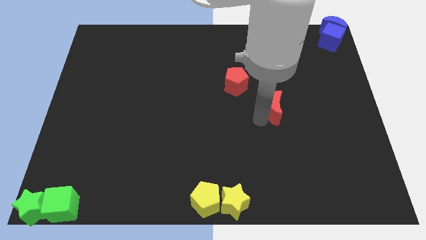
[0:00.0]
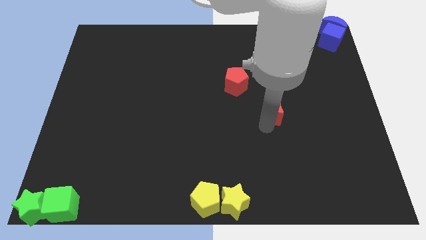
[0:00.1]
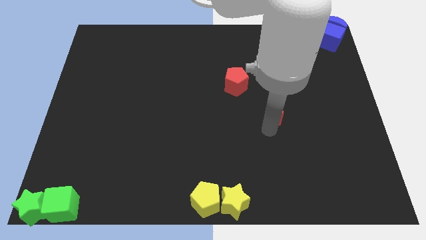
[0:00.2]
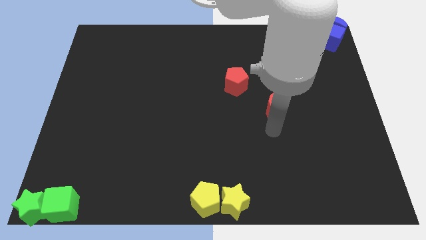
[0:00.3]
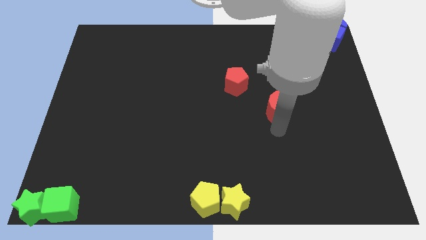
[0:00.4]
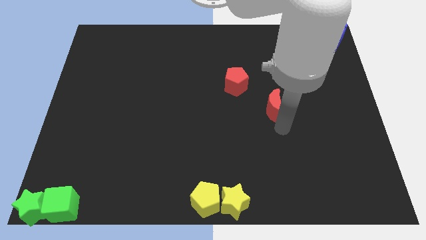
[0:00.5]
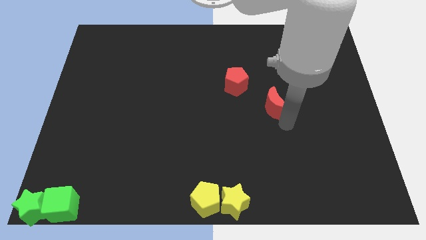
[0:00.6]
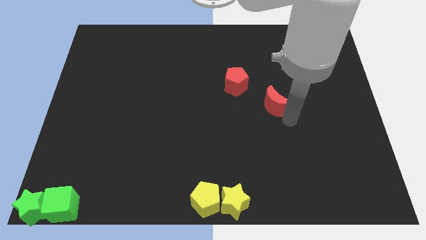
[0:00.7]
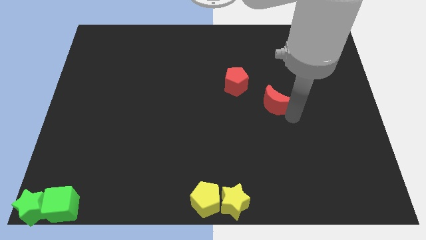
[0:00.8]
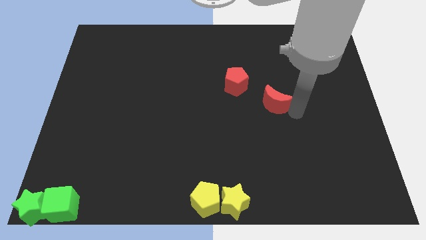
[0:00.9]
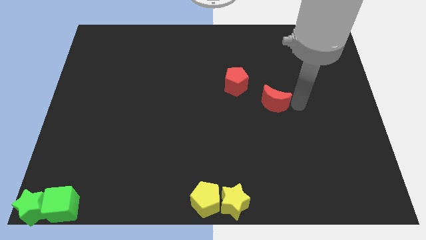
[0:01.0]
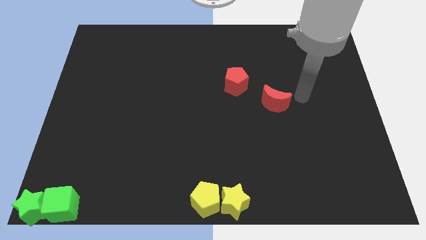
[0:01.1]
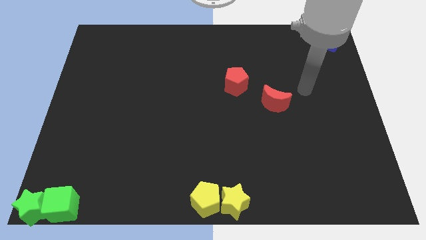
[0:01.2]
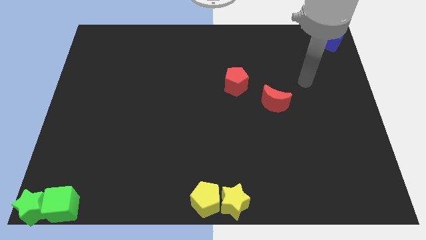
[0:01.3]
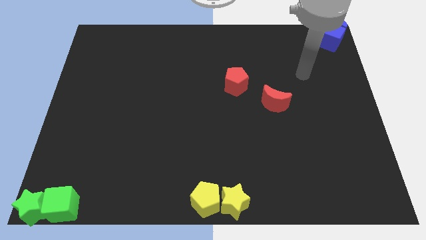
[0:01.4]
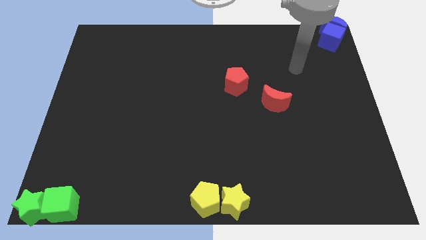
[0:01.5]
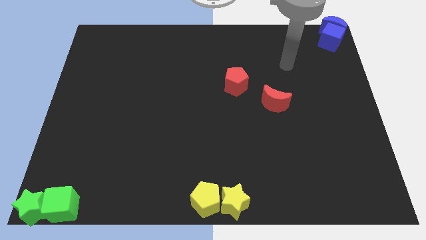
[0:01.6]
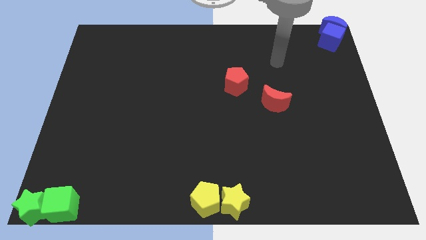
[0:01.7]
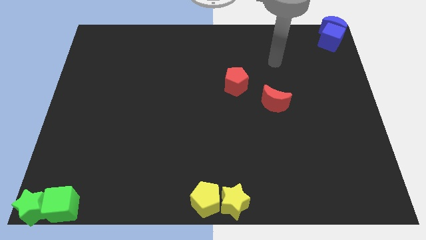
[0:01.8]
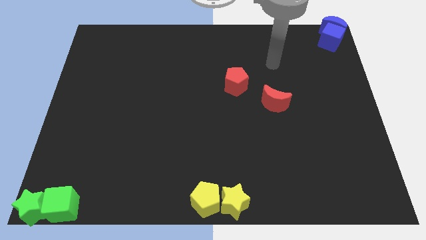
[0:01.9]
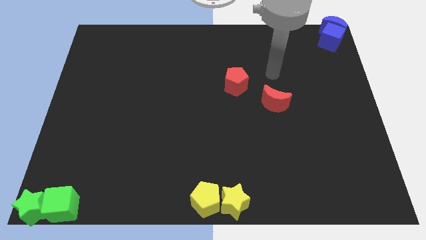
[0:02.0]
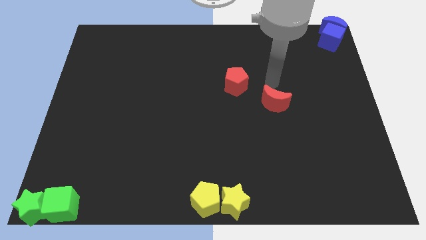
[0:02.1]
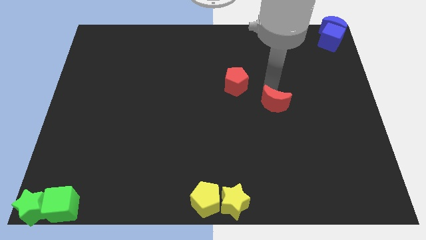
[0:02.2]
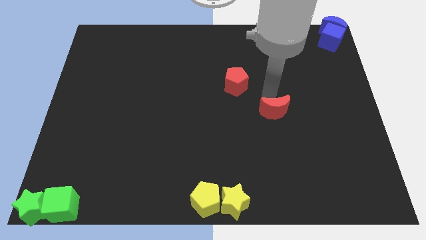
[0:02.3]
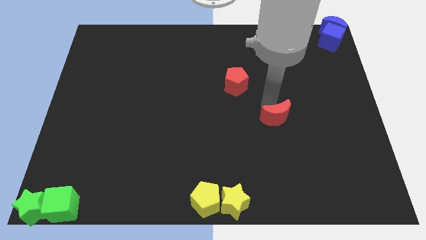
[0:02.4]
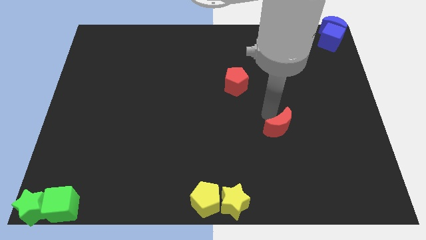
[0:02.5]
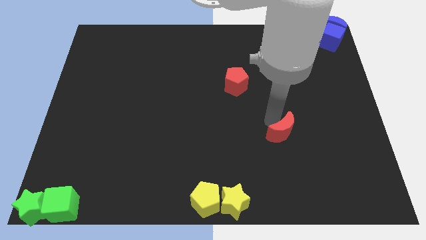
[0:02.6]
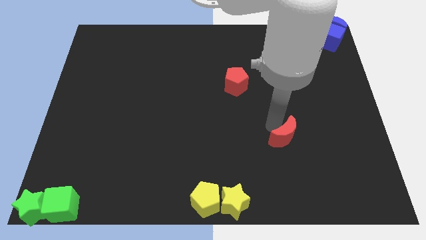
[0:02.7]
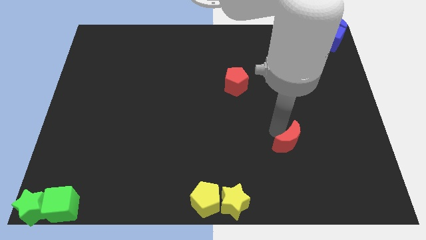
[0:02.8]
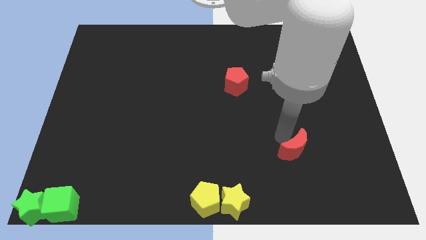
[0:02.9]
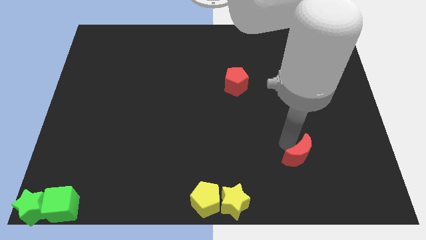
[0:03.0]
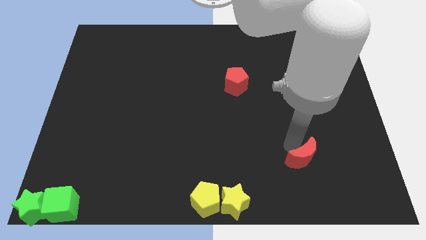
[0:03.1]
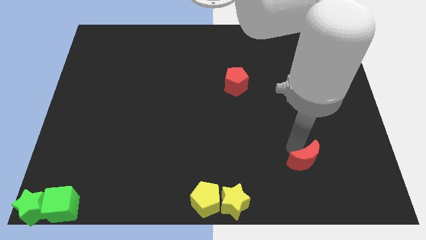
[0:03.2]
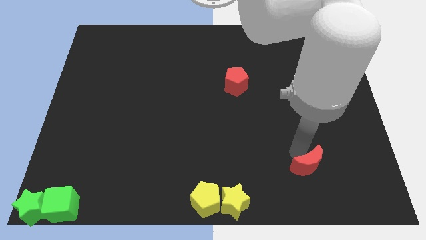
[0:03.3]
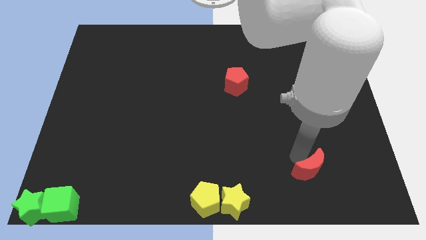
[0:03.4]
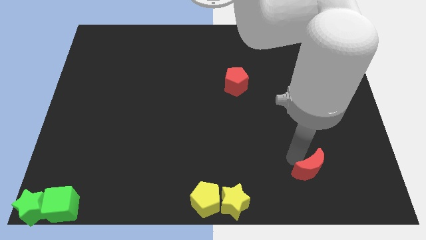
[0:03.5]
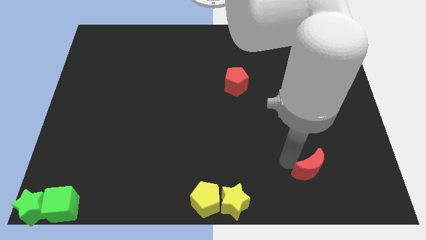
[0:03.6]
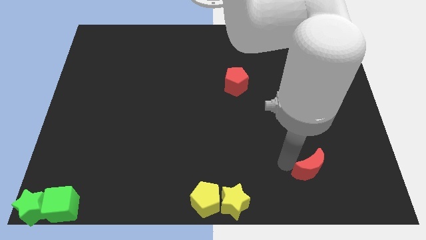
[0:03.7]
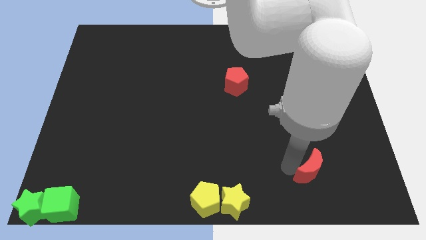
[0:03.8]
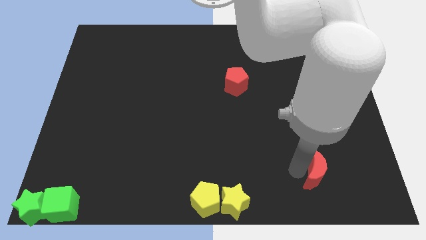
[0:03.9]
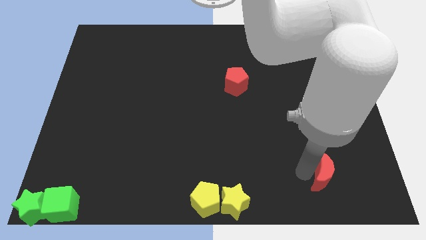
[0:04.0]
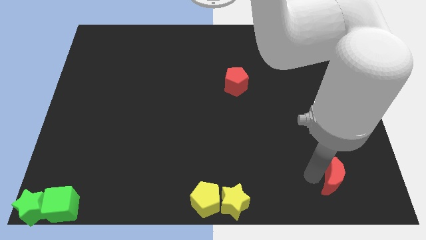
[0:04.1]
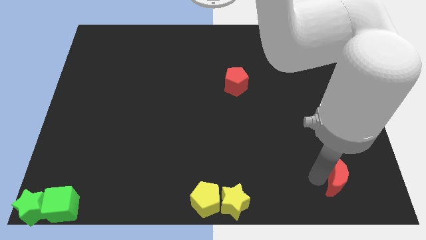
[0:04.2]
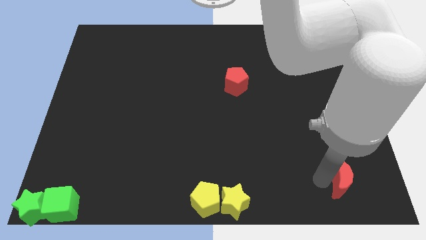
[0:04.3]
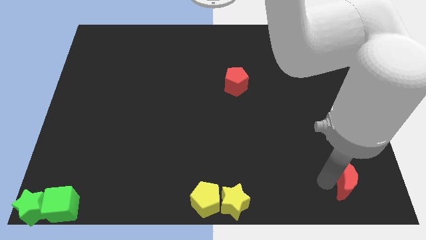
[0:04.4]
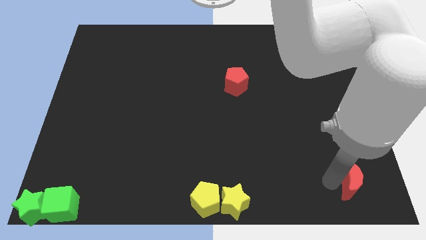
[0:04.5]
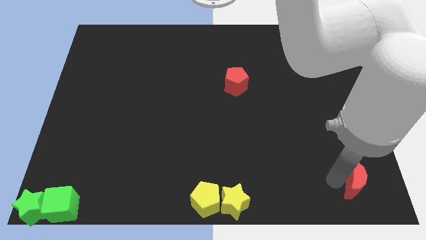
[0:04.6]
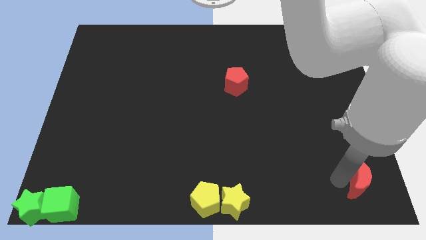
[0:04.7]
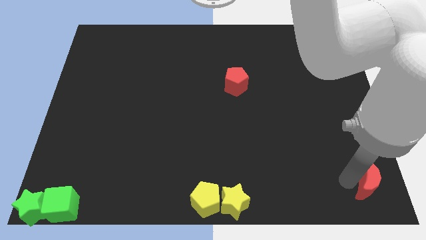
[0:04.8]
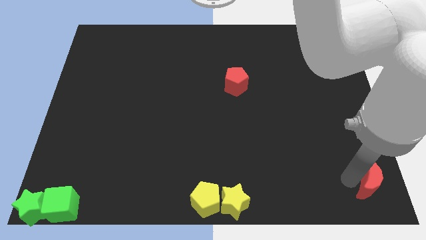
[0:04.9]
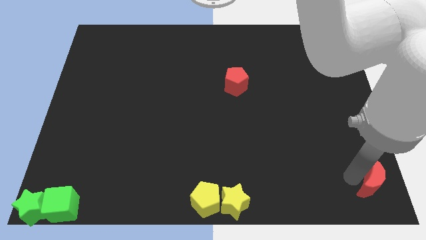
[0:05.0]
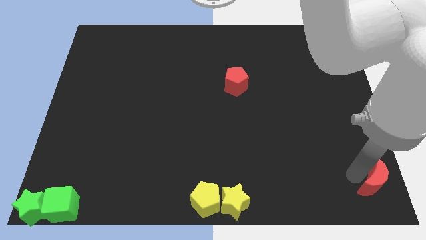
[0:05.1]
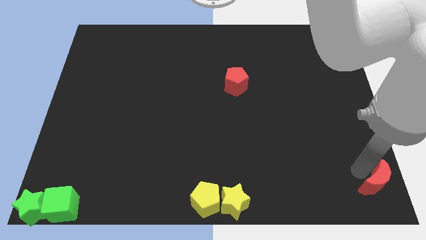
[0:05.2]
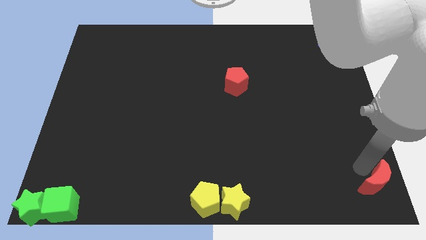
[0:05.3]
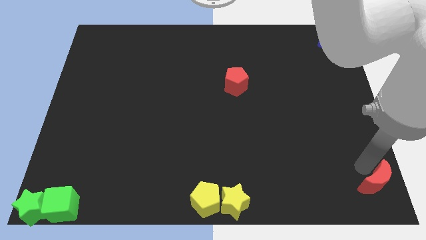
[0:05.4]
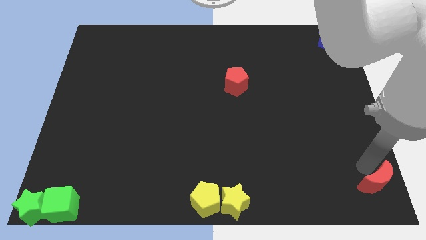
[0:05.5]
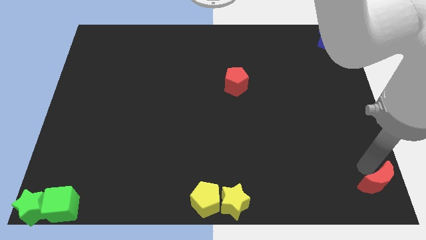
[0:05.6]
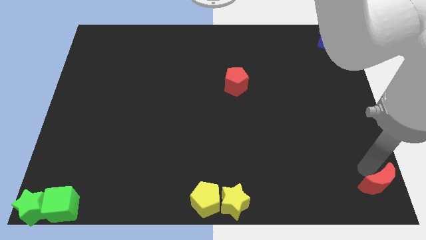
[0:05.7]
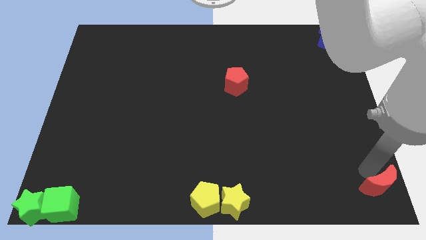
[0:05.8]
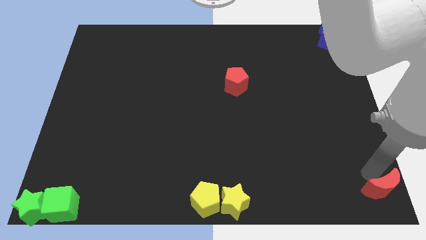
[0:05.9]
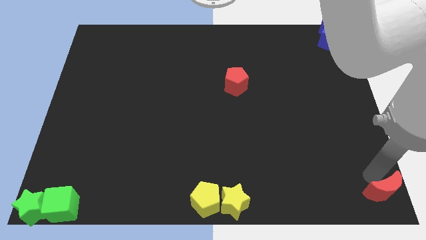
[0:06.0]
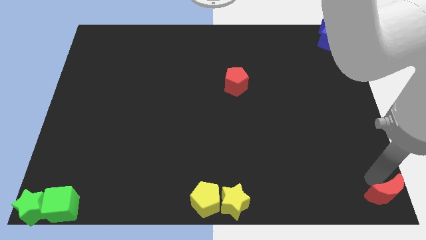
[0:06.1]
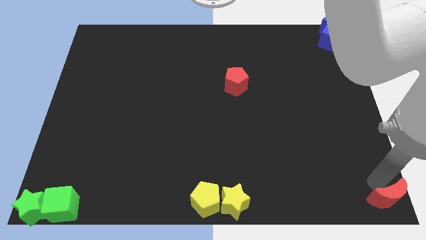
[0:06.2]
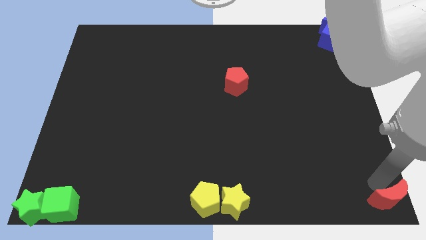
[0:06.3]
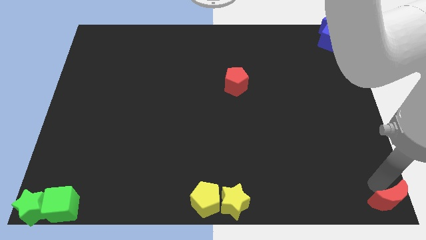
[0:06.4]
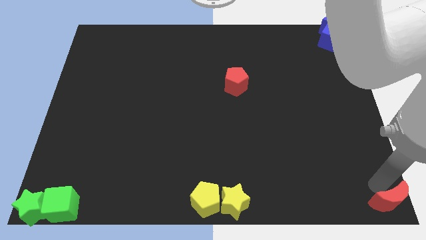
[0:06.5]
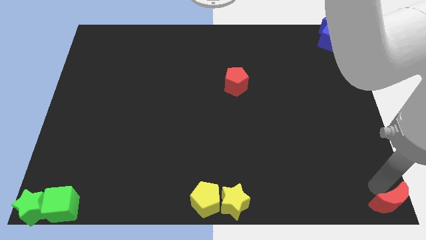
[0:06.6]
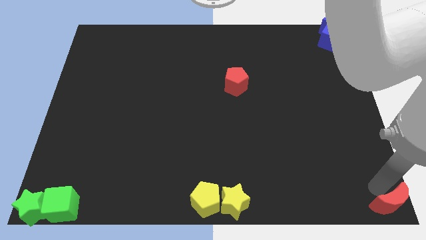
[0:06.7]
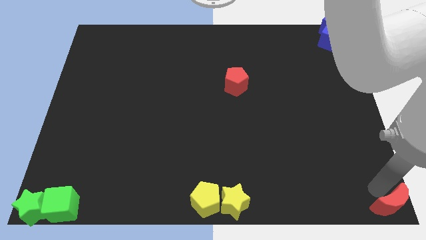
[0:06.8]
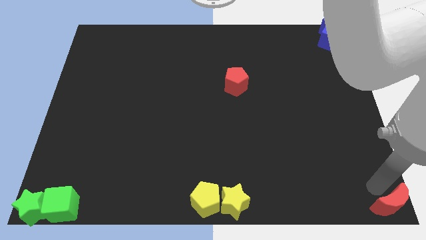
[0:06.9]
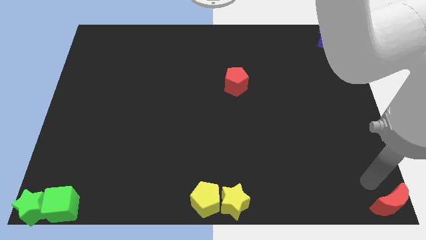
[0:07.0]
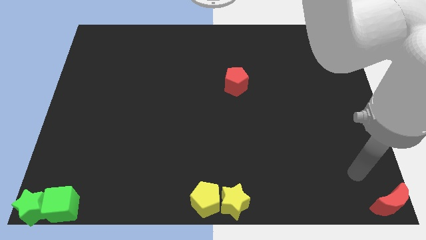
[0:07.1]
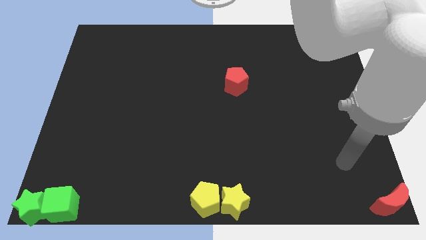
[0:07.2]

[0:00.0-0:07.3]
move the red moon to the bottom right corner of the board

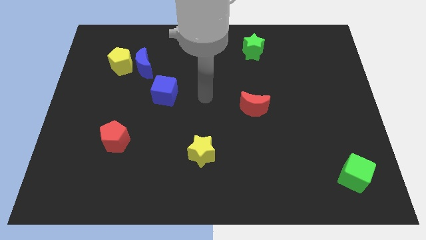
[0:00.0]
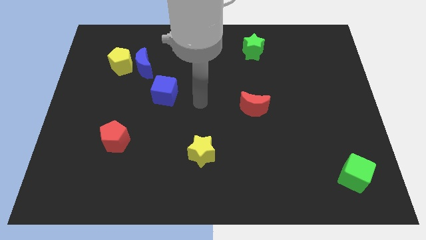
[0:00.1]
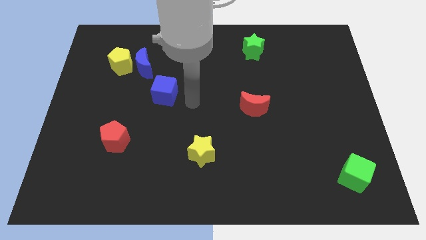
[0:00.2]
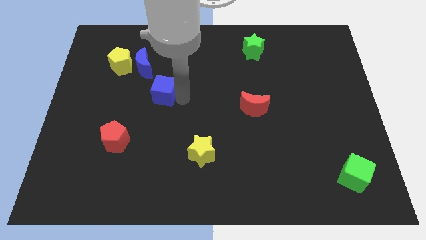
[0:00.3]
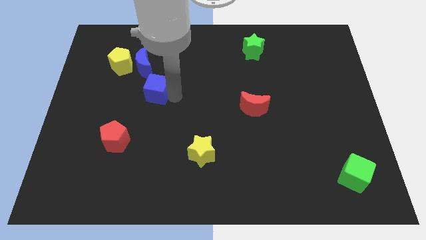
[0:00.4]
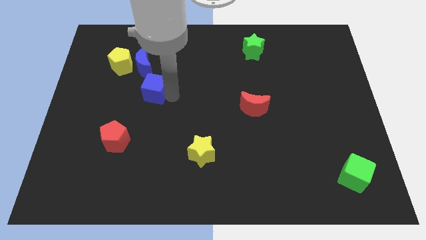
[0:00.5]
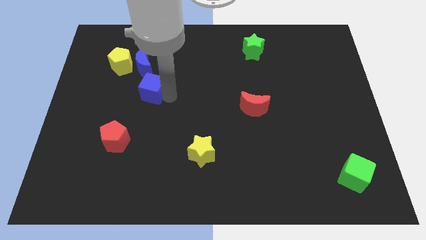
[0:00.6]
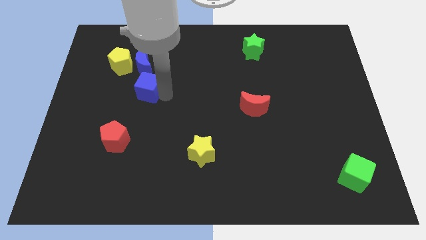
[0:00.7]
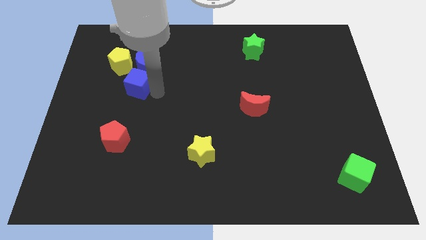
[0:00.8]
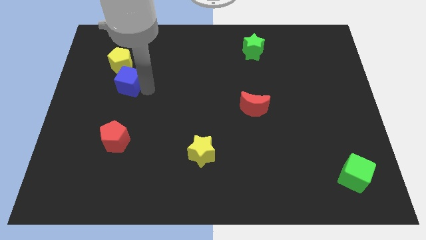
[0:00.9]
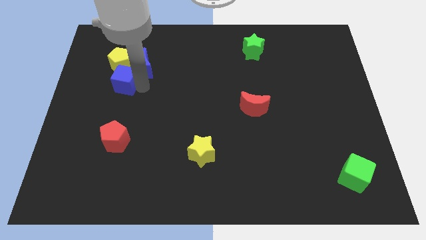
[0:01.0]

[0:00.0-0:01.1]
move blue cube into yellow pentagon

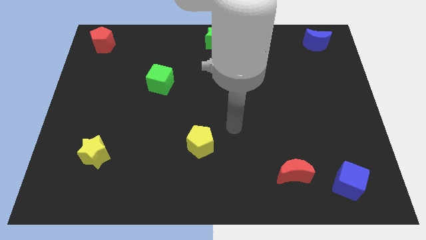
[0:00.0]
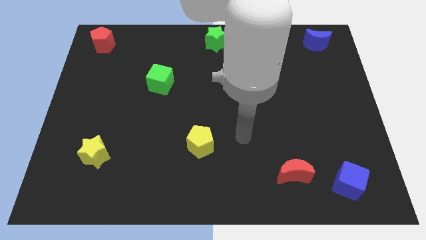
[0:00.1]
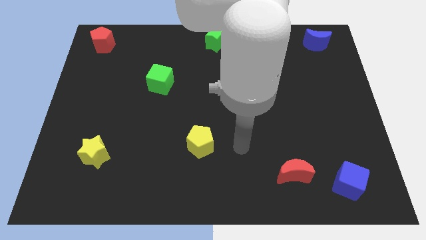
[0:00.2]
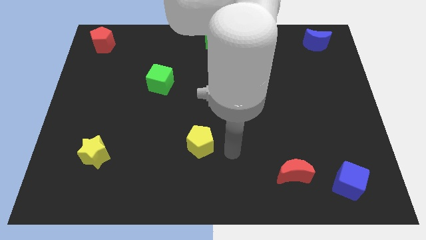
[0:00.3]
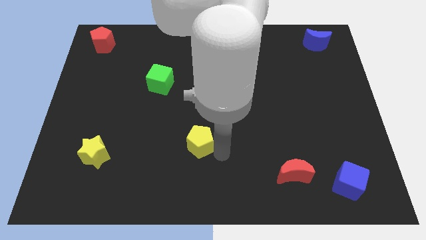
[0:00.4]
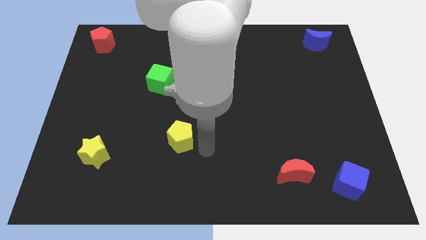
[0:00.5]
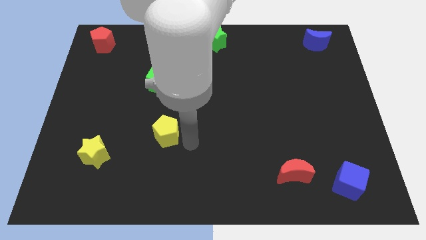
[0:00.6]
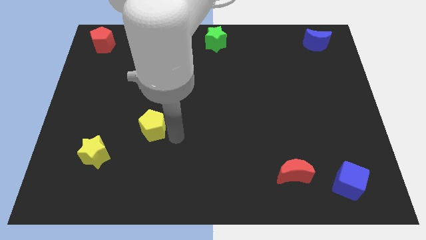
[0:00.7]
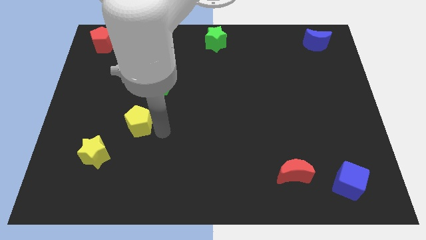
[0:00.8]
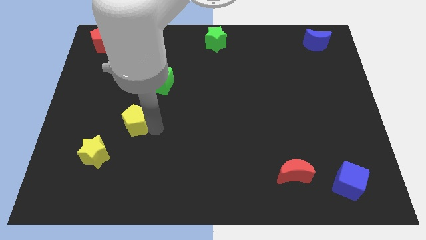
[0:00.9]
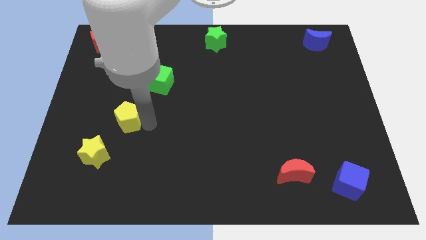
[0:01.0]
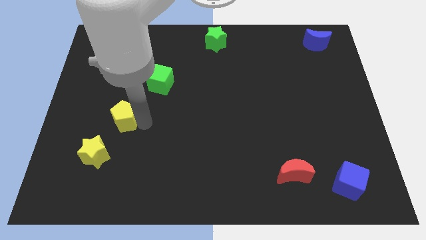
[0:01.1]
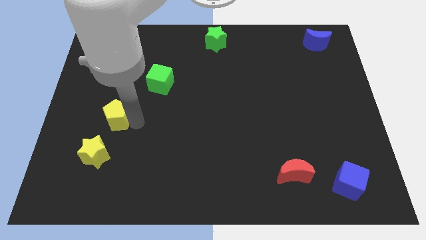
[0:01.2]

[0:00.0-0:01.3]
place the yellow pentagon between the yellow star and green cube
